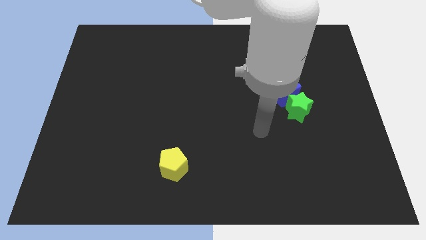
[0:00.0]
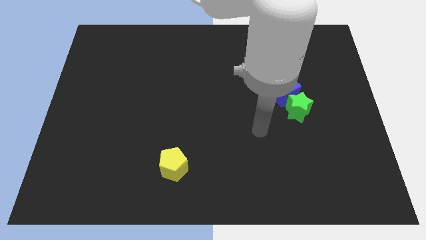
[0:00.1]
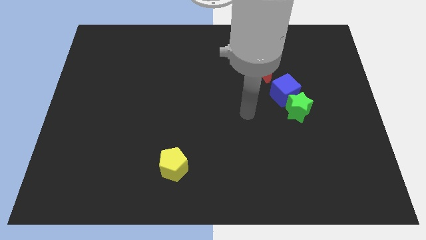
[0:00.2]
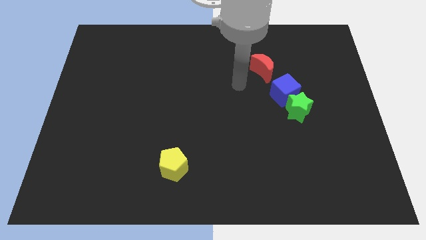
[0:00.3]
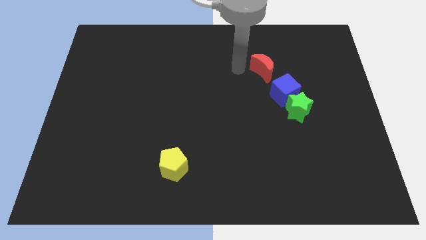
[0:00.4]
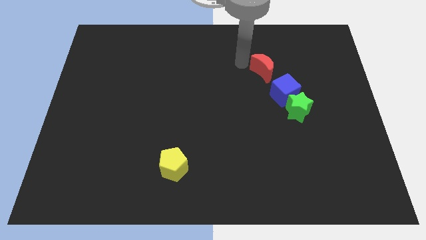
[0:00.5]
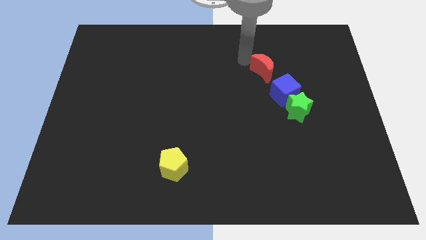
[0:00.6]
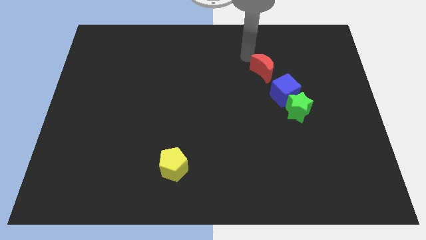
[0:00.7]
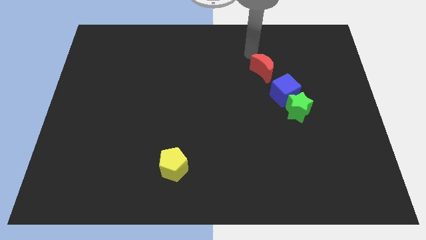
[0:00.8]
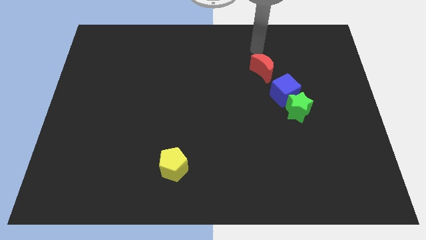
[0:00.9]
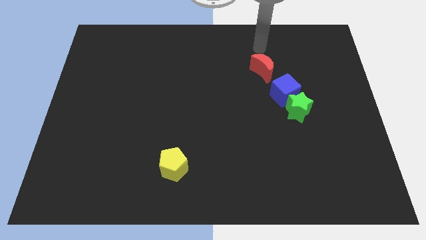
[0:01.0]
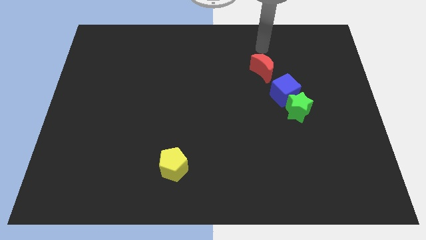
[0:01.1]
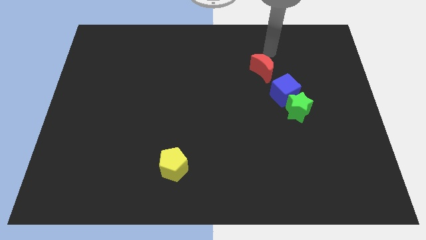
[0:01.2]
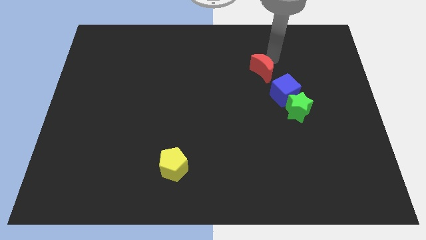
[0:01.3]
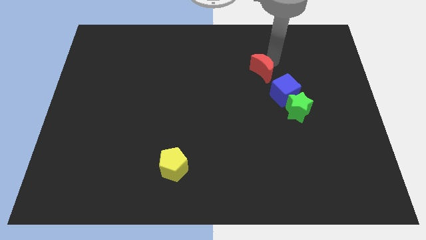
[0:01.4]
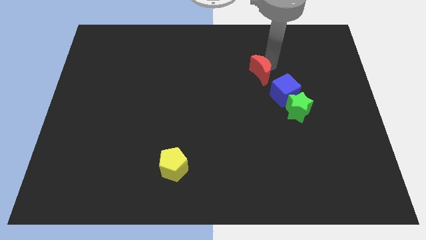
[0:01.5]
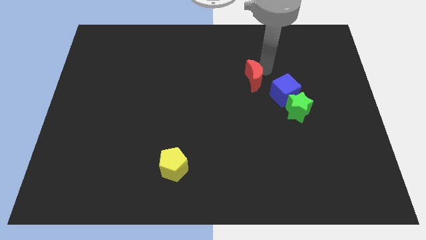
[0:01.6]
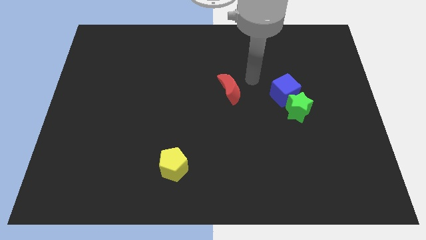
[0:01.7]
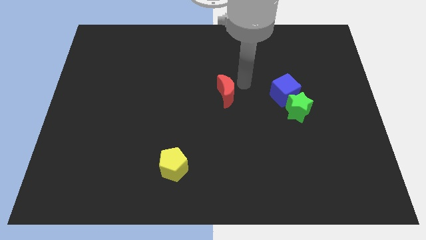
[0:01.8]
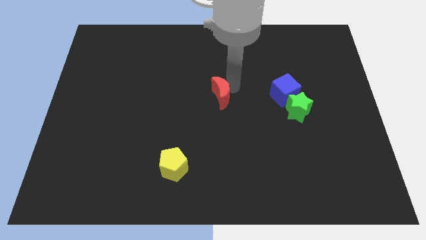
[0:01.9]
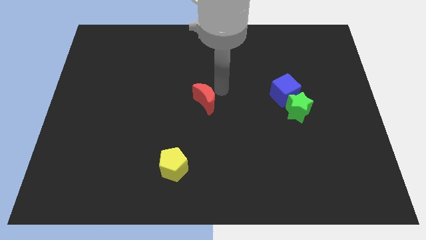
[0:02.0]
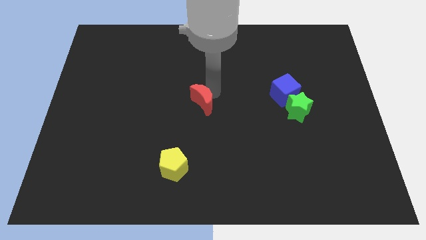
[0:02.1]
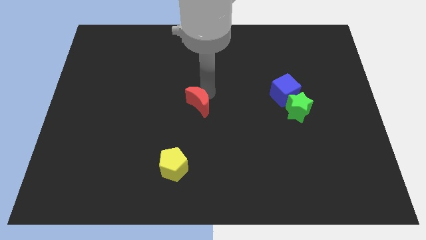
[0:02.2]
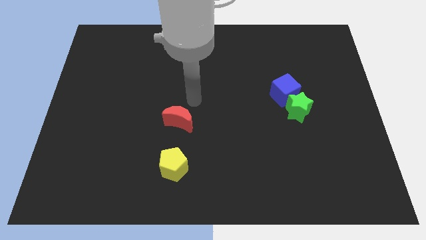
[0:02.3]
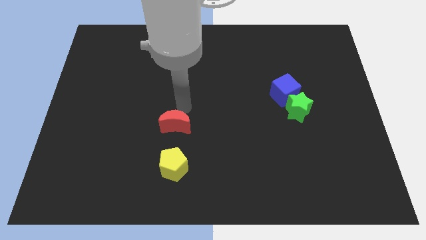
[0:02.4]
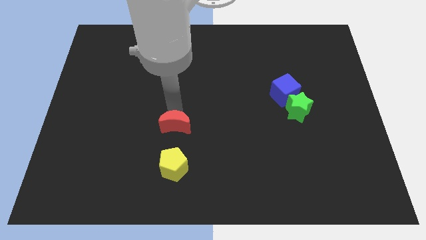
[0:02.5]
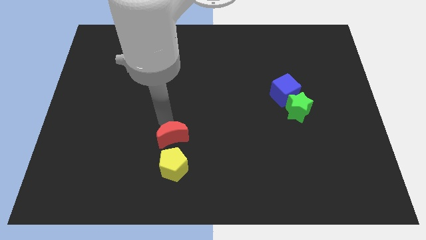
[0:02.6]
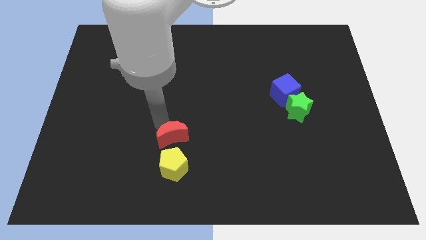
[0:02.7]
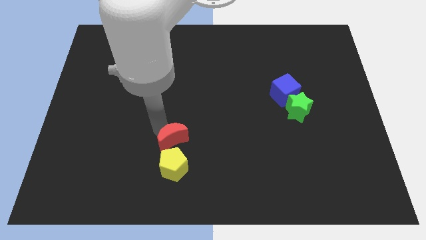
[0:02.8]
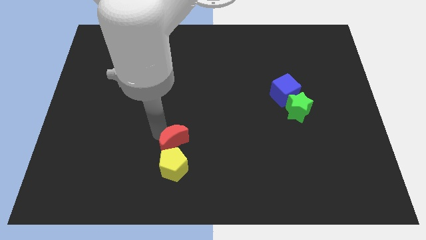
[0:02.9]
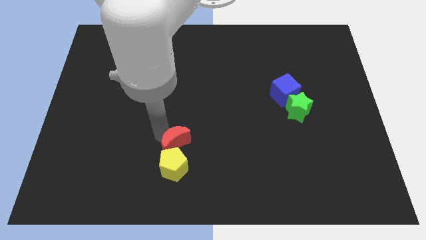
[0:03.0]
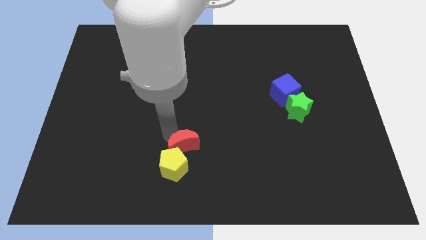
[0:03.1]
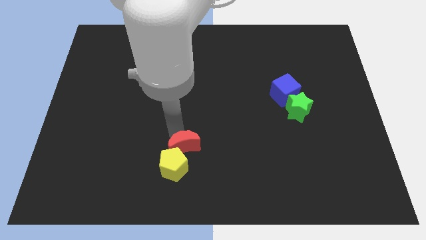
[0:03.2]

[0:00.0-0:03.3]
move the red moon towards the pentagon

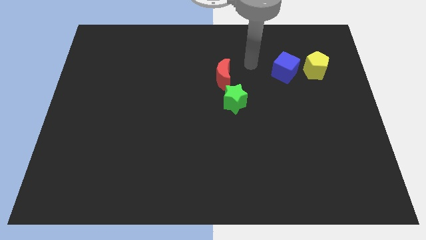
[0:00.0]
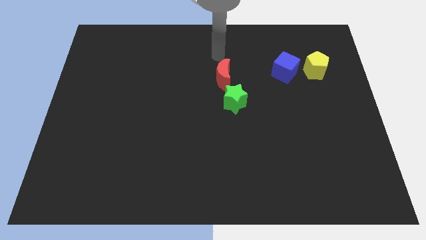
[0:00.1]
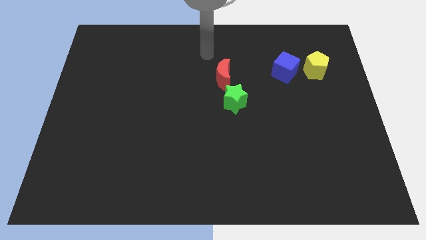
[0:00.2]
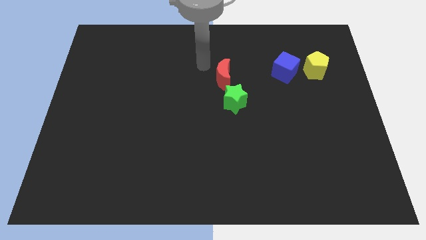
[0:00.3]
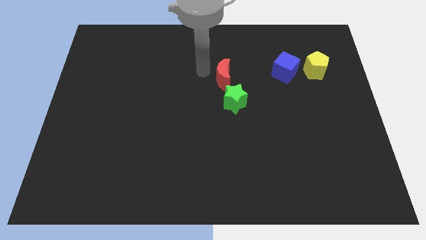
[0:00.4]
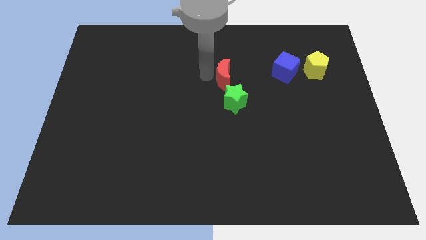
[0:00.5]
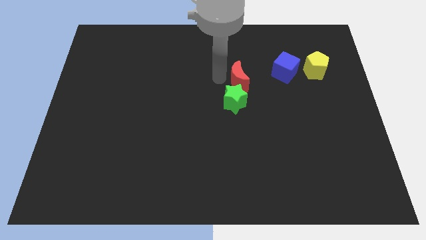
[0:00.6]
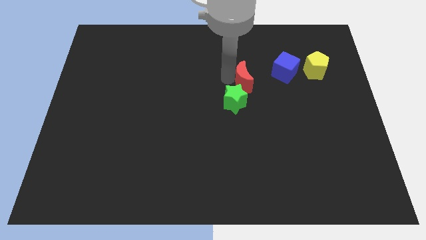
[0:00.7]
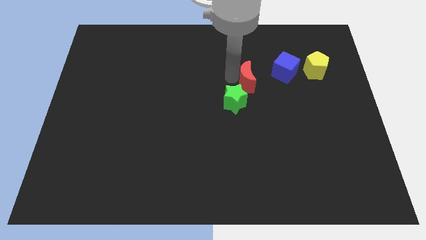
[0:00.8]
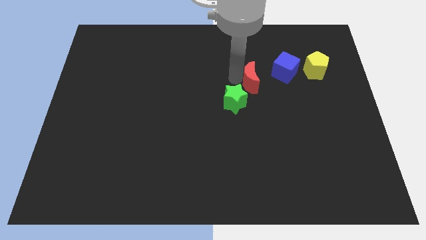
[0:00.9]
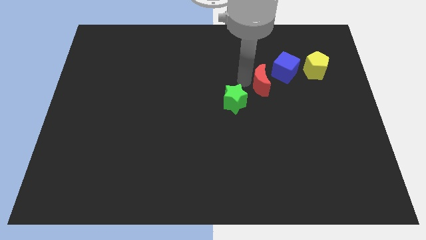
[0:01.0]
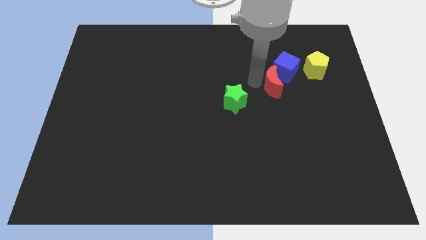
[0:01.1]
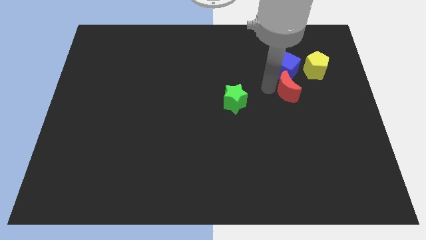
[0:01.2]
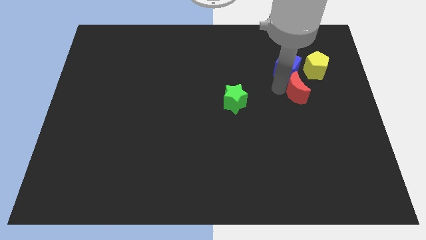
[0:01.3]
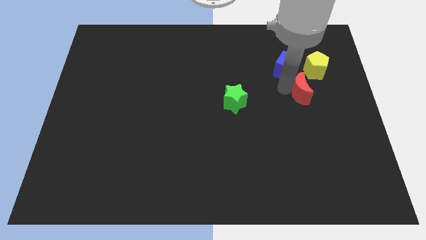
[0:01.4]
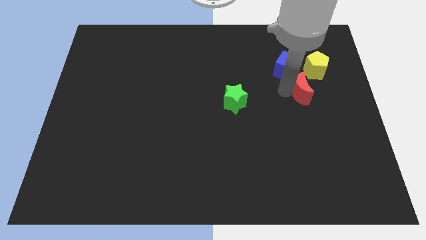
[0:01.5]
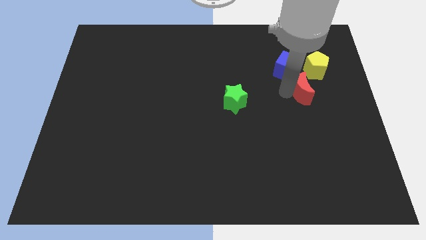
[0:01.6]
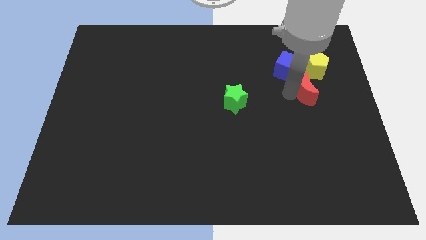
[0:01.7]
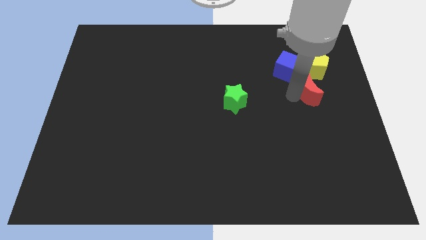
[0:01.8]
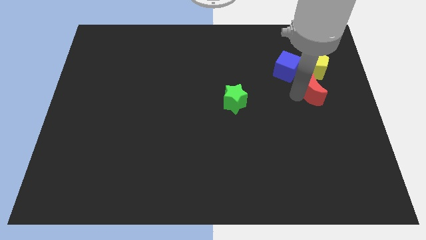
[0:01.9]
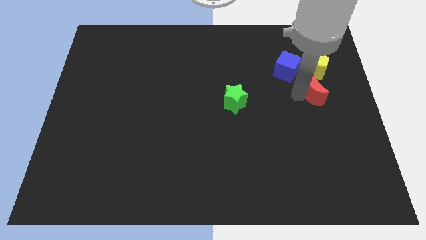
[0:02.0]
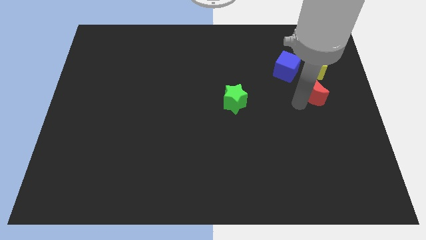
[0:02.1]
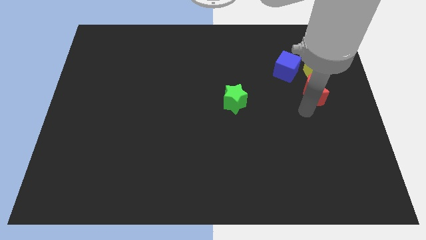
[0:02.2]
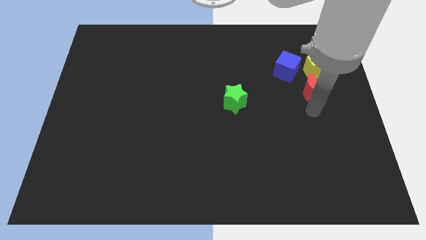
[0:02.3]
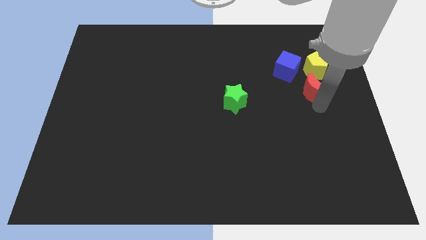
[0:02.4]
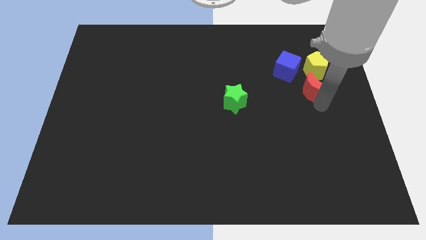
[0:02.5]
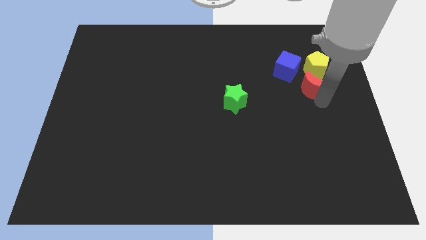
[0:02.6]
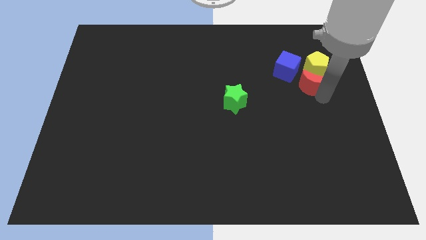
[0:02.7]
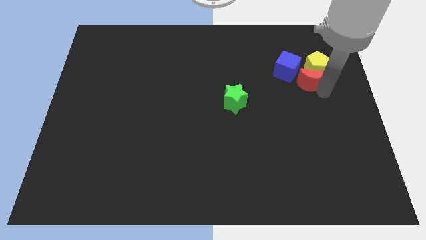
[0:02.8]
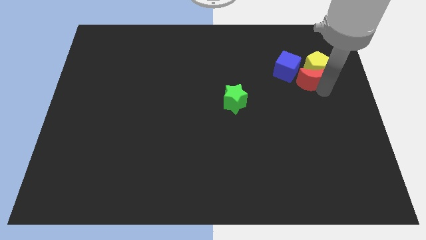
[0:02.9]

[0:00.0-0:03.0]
slide the red moon close to the yellow block

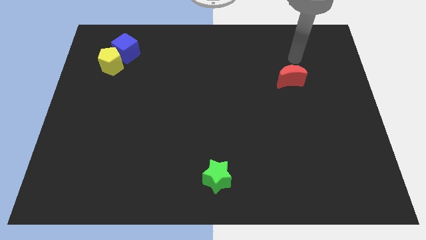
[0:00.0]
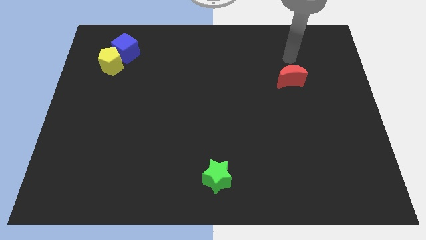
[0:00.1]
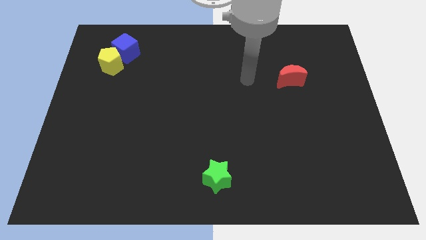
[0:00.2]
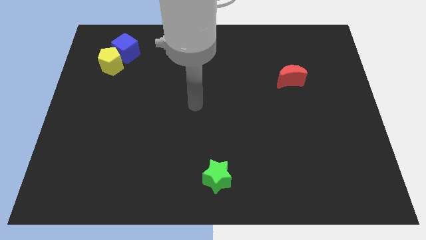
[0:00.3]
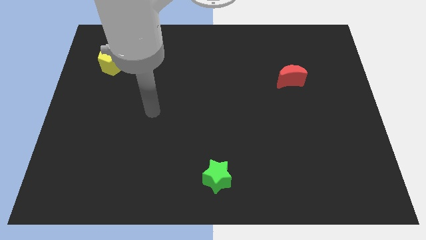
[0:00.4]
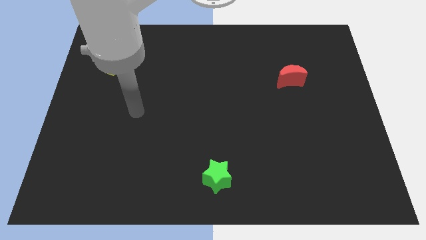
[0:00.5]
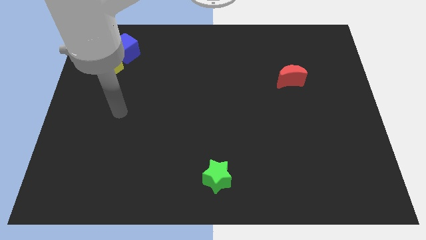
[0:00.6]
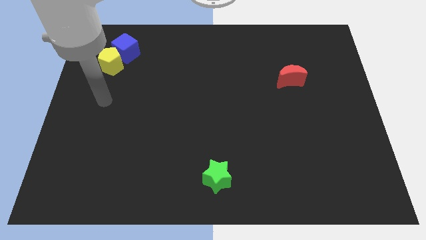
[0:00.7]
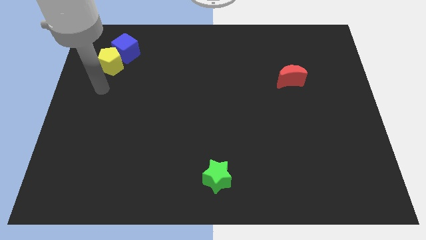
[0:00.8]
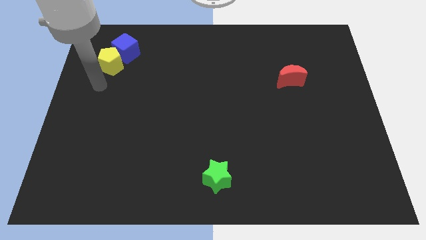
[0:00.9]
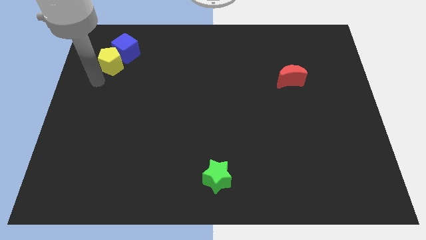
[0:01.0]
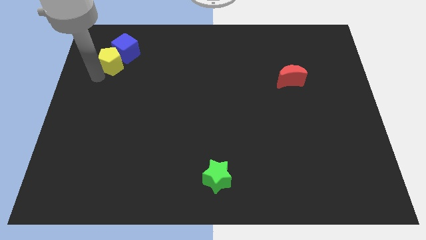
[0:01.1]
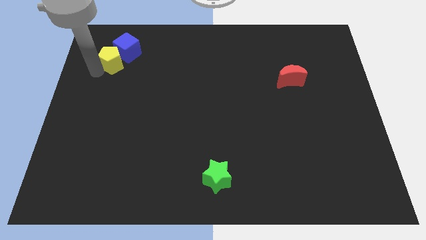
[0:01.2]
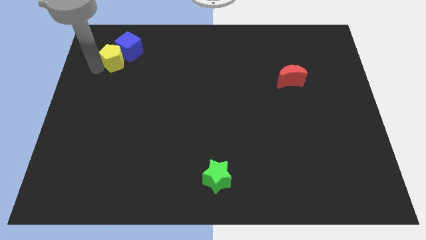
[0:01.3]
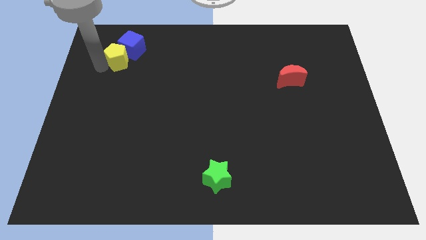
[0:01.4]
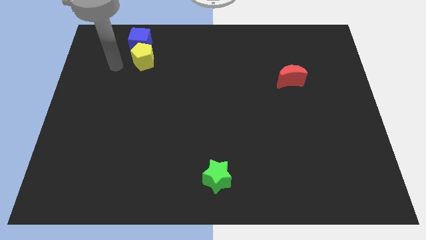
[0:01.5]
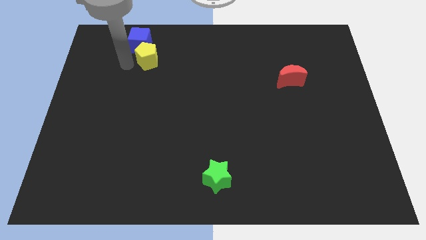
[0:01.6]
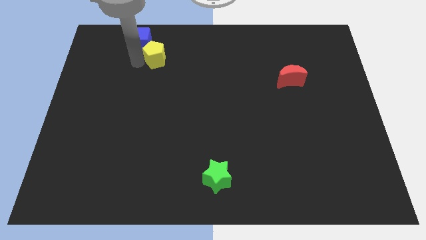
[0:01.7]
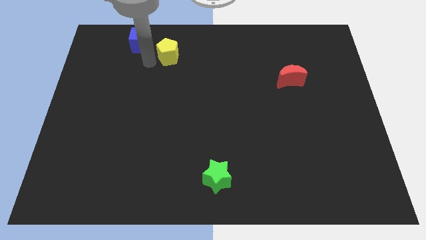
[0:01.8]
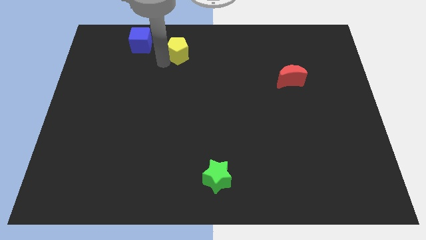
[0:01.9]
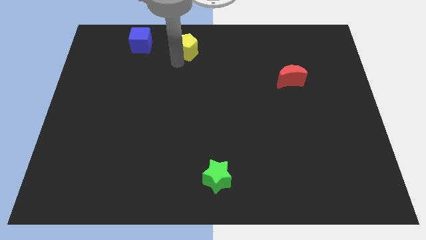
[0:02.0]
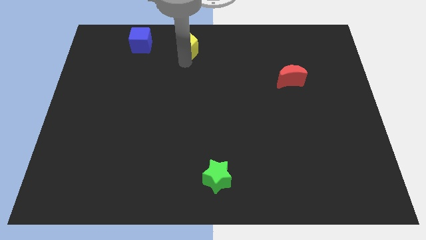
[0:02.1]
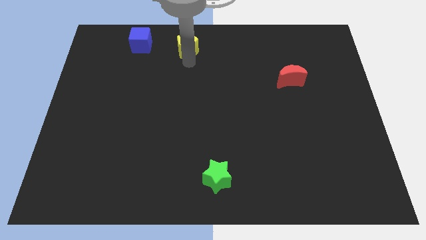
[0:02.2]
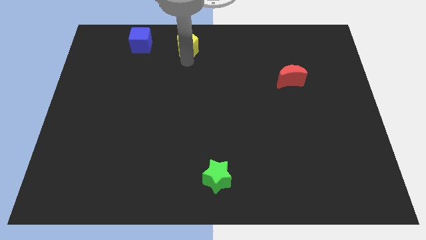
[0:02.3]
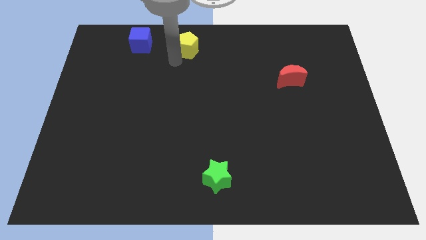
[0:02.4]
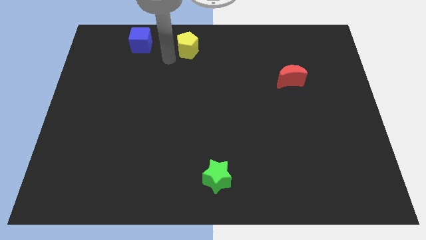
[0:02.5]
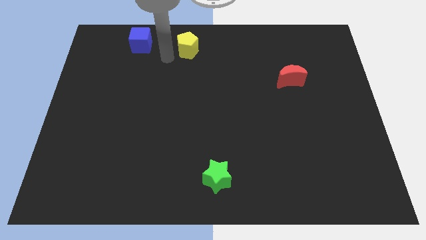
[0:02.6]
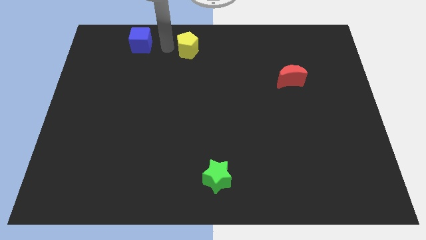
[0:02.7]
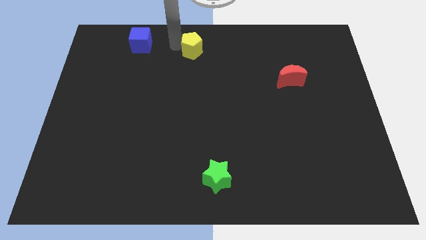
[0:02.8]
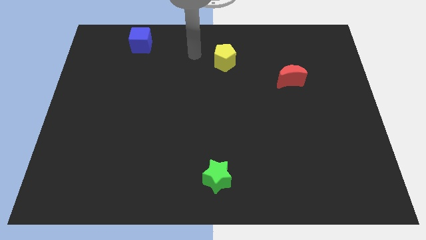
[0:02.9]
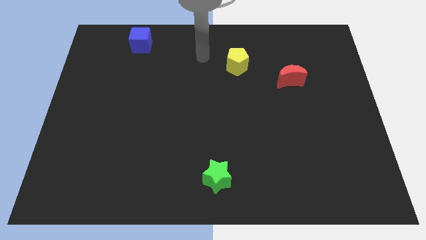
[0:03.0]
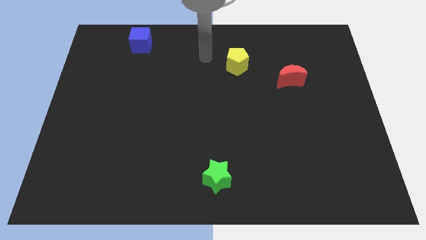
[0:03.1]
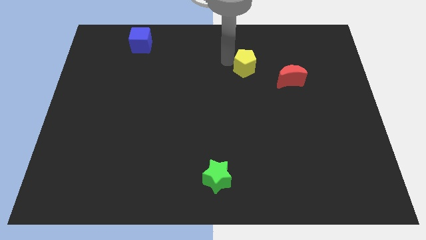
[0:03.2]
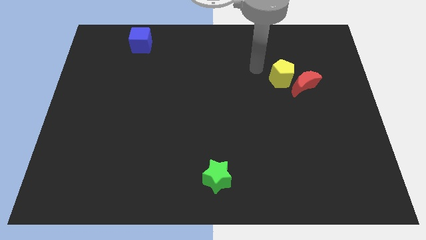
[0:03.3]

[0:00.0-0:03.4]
slide the pentagon next to the moon
